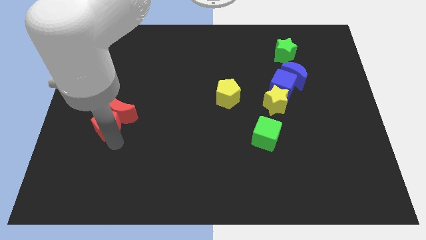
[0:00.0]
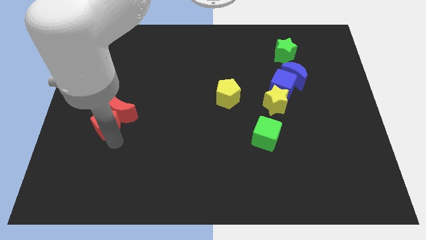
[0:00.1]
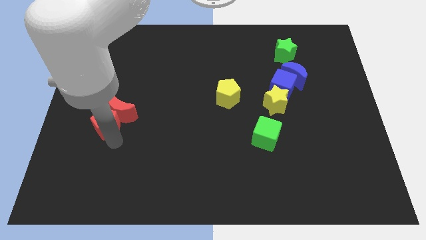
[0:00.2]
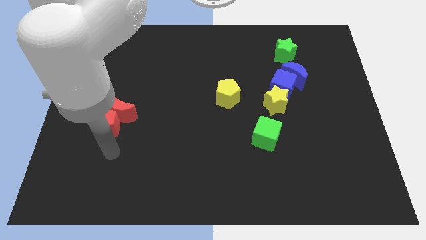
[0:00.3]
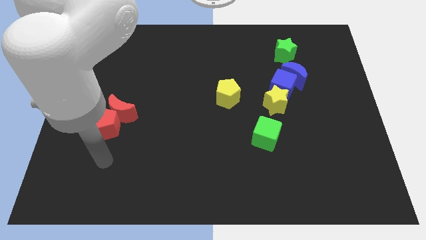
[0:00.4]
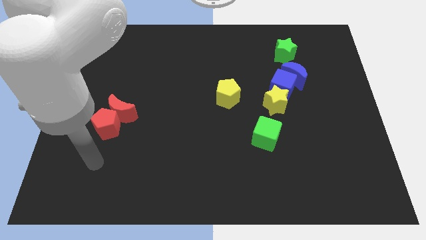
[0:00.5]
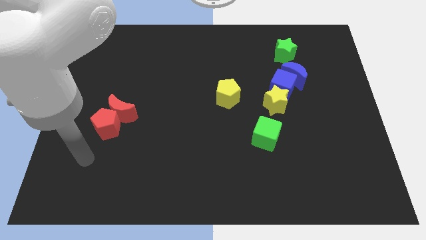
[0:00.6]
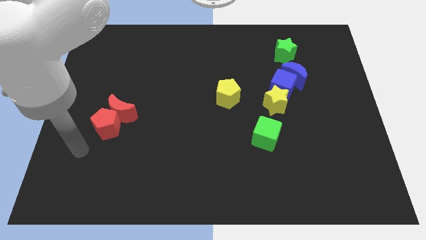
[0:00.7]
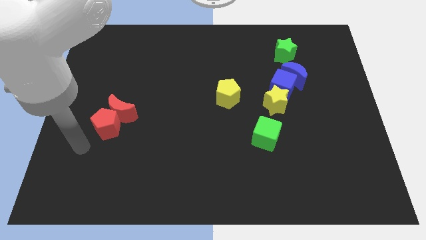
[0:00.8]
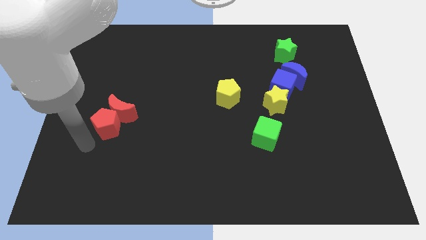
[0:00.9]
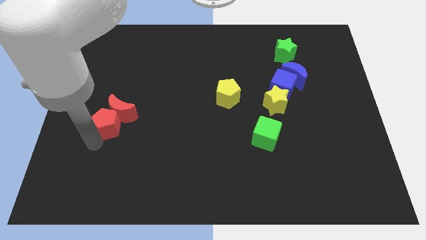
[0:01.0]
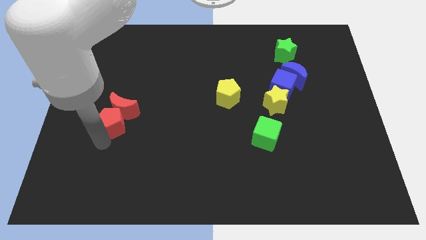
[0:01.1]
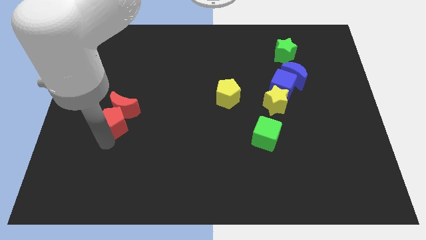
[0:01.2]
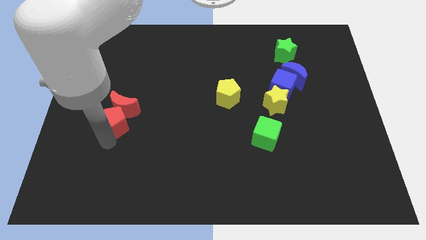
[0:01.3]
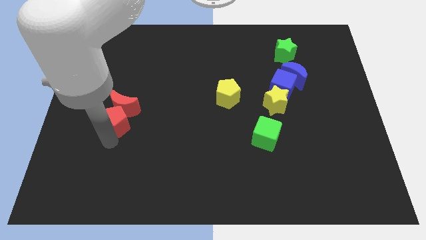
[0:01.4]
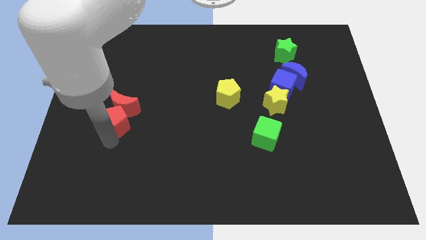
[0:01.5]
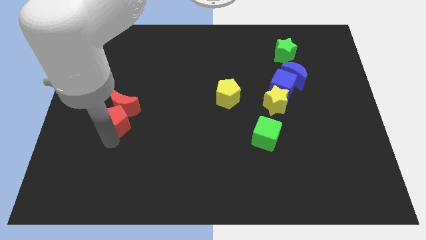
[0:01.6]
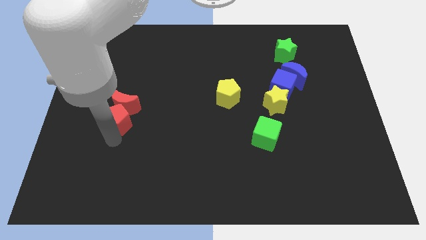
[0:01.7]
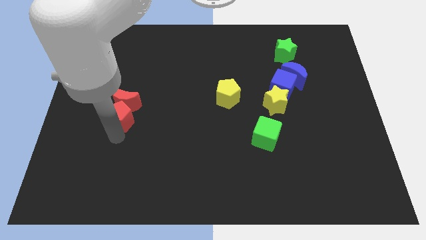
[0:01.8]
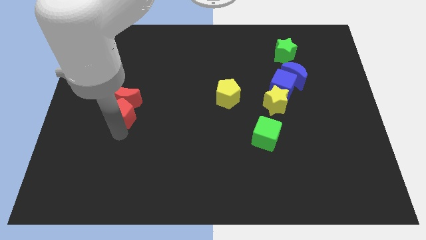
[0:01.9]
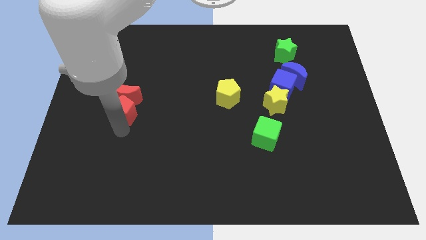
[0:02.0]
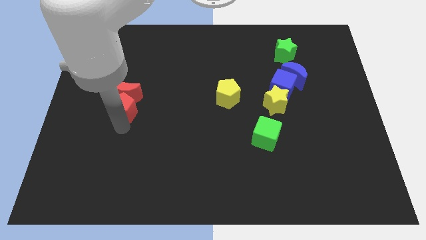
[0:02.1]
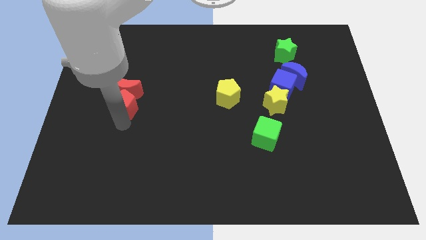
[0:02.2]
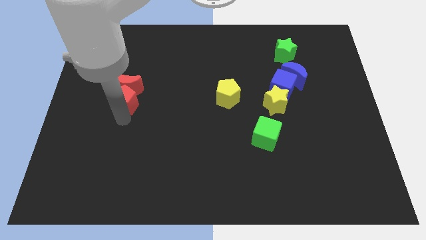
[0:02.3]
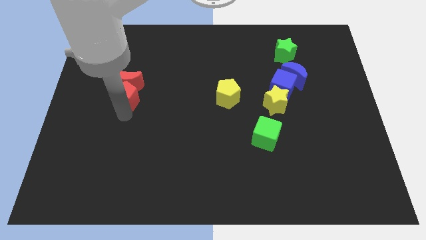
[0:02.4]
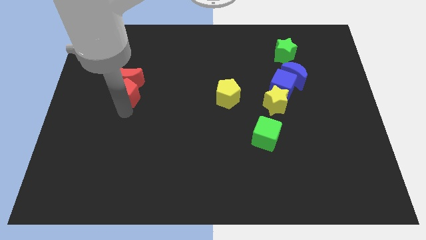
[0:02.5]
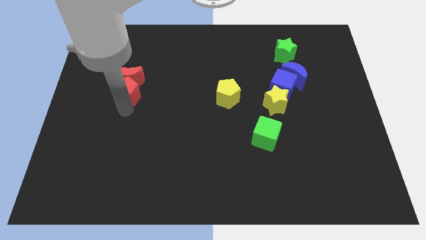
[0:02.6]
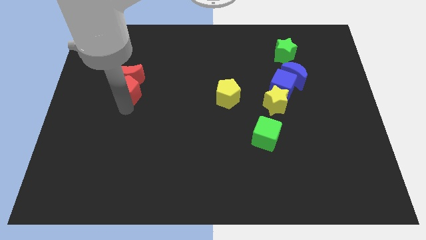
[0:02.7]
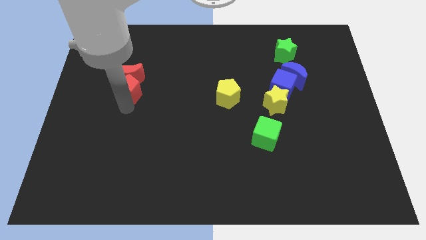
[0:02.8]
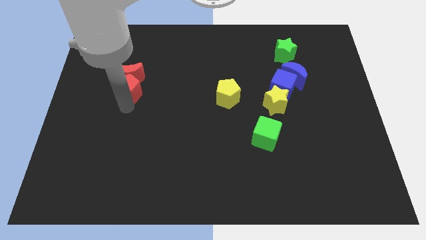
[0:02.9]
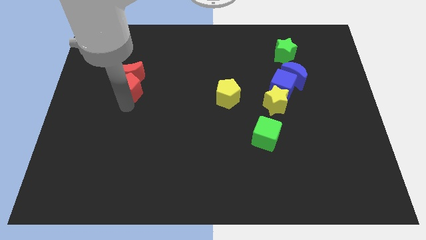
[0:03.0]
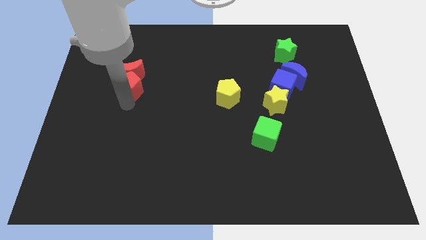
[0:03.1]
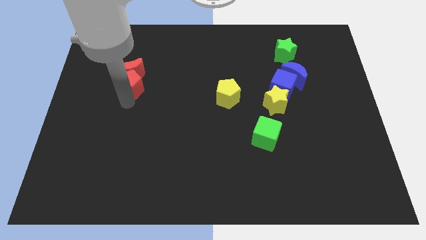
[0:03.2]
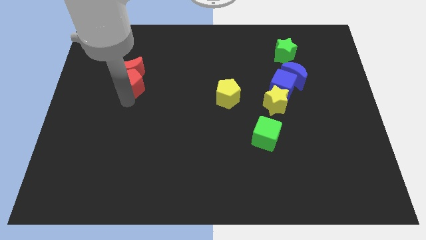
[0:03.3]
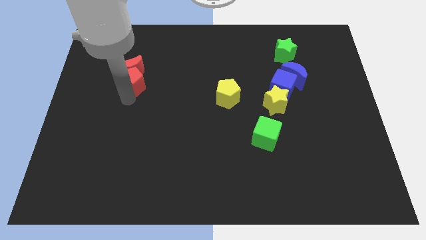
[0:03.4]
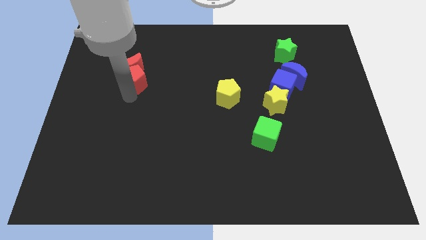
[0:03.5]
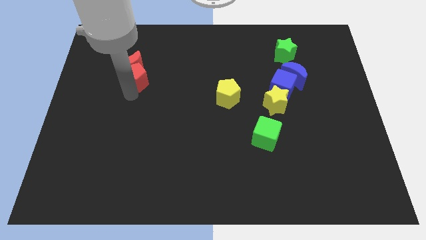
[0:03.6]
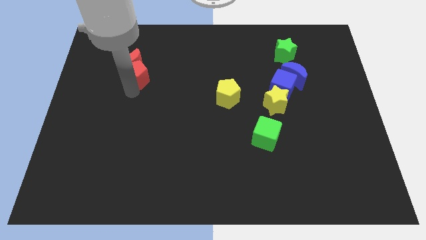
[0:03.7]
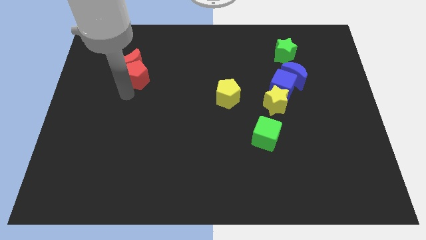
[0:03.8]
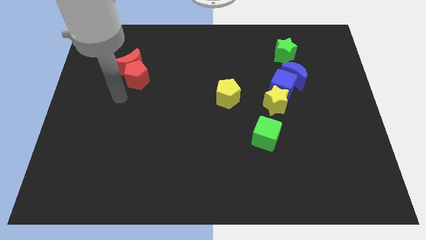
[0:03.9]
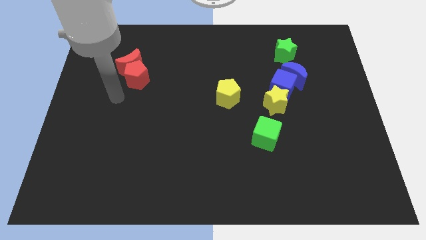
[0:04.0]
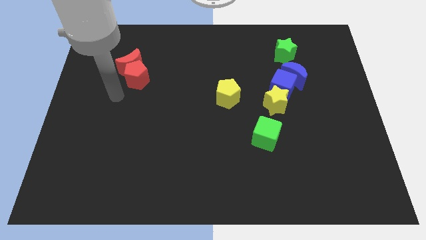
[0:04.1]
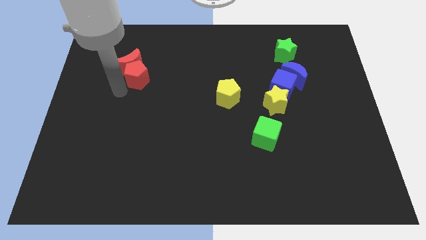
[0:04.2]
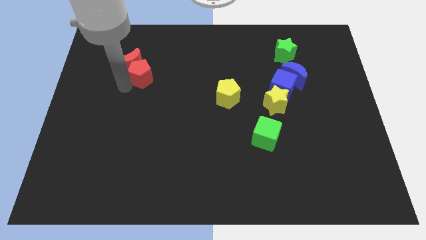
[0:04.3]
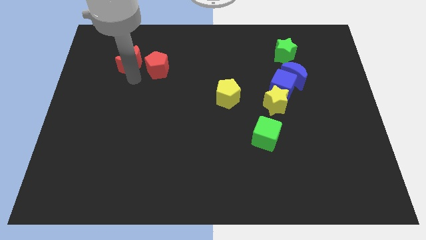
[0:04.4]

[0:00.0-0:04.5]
move the red moon upwards with the red pentagon

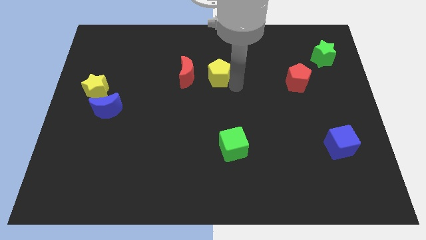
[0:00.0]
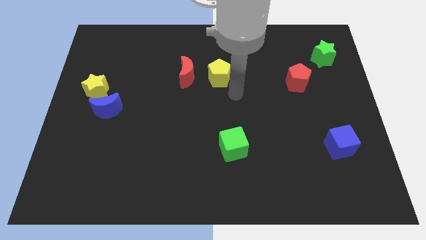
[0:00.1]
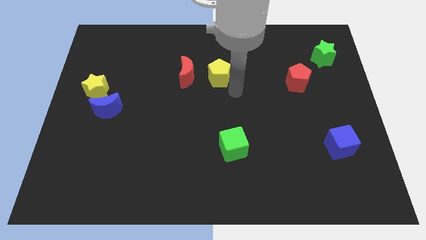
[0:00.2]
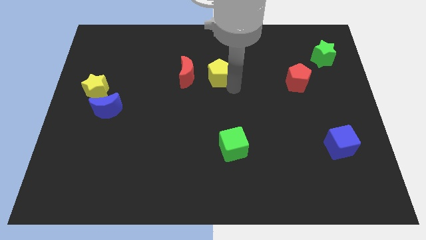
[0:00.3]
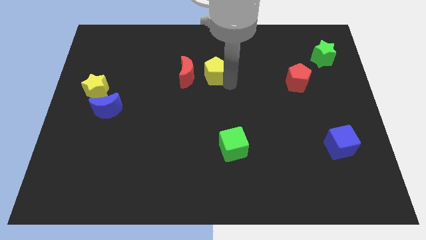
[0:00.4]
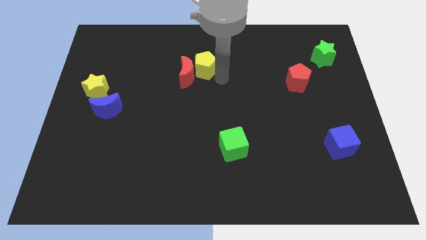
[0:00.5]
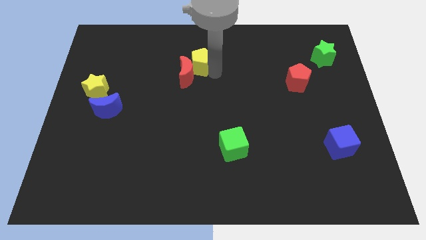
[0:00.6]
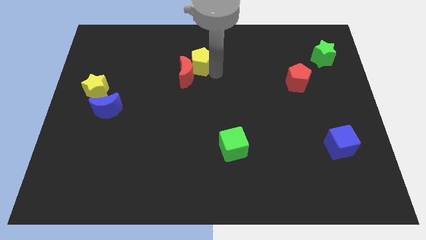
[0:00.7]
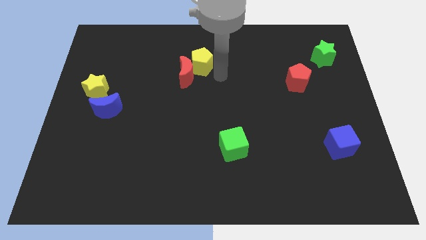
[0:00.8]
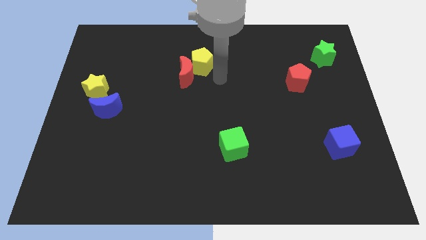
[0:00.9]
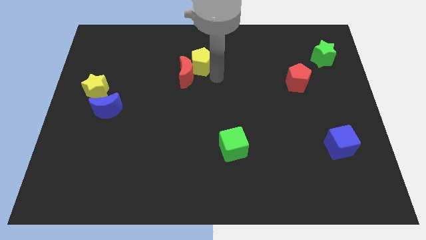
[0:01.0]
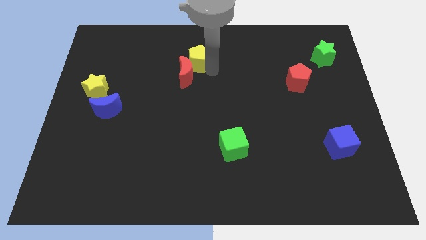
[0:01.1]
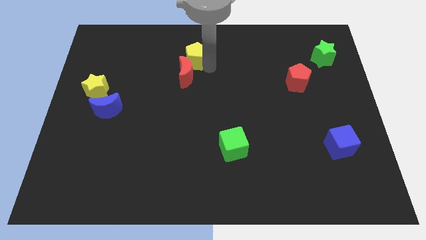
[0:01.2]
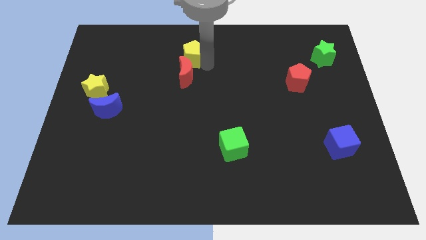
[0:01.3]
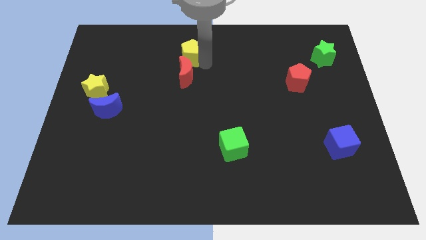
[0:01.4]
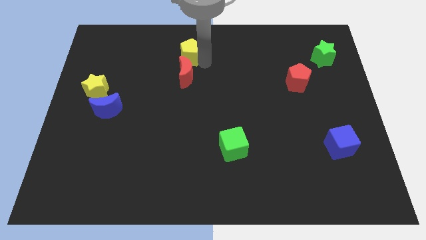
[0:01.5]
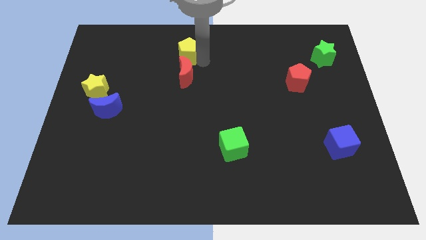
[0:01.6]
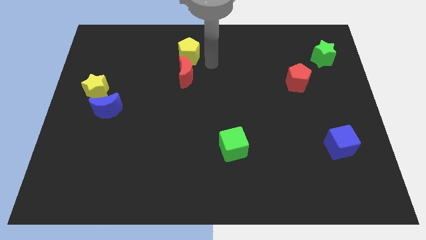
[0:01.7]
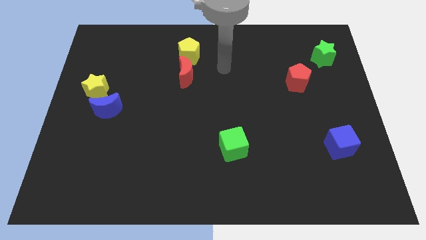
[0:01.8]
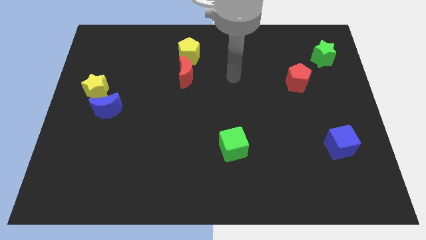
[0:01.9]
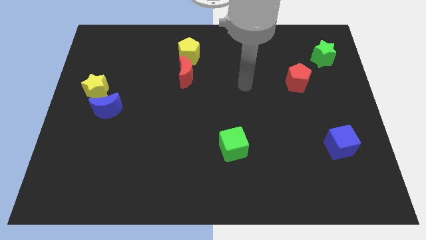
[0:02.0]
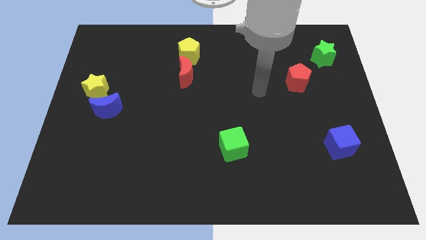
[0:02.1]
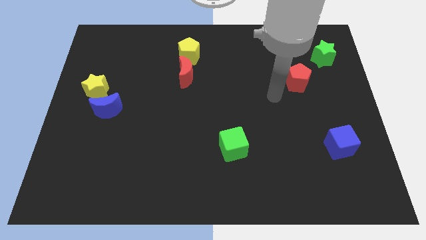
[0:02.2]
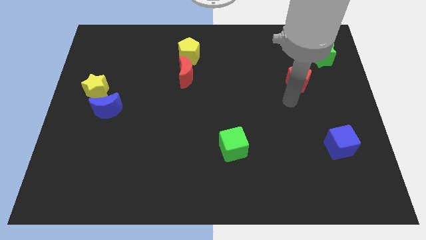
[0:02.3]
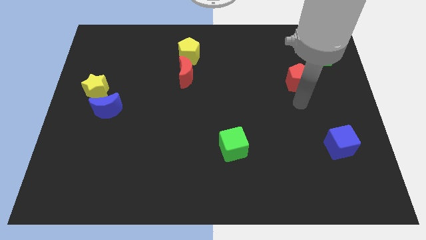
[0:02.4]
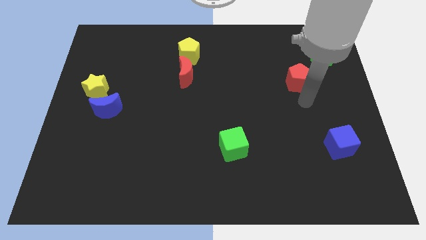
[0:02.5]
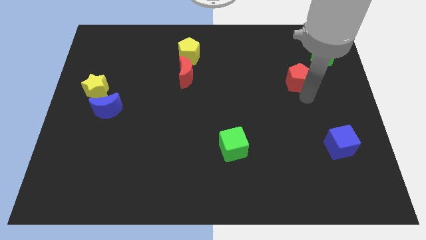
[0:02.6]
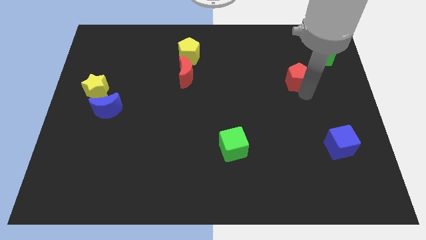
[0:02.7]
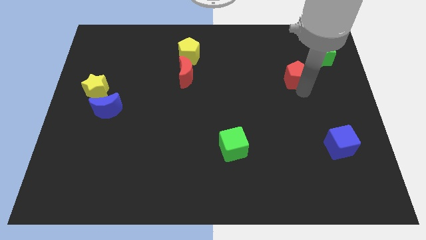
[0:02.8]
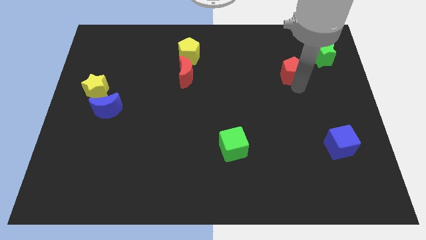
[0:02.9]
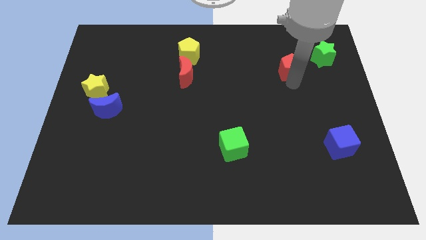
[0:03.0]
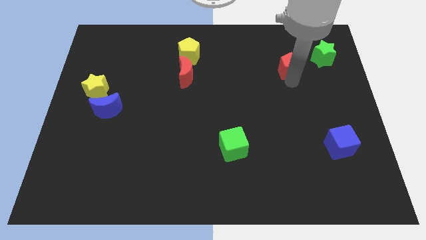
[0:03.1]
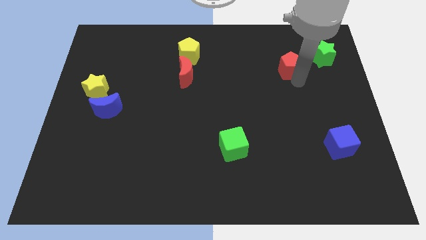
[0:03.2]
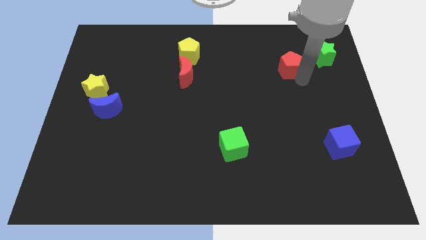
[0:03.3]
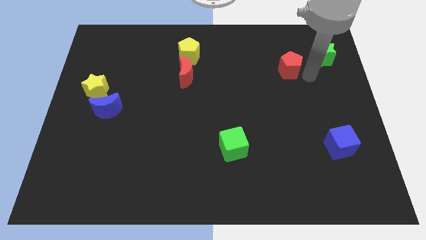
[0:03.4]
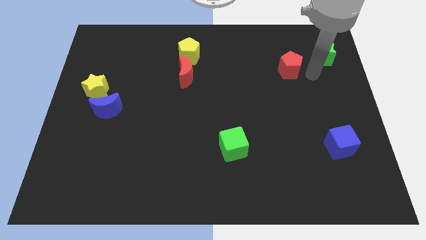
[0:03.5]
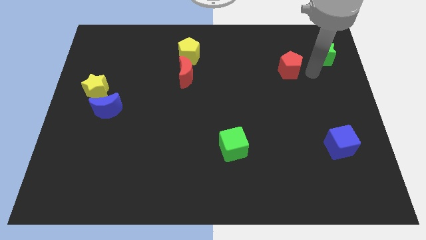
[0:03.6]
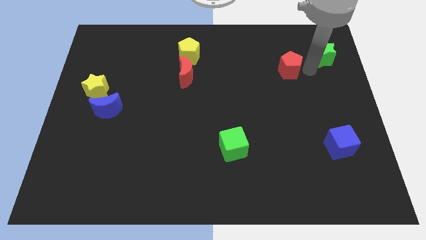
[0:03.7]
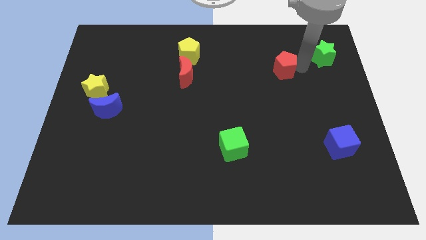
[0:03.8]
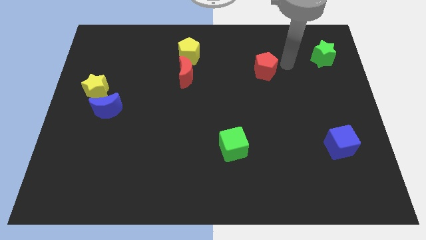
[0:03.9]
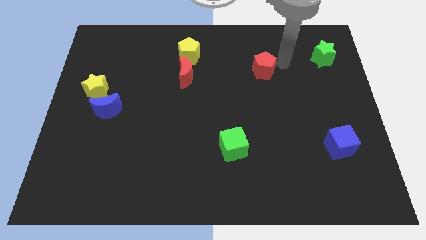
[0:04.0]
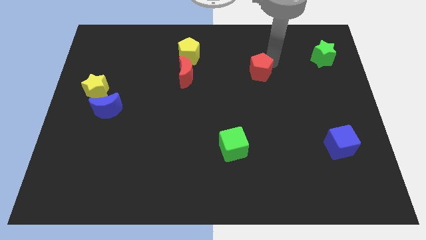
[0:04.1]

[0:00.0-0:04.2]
place the yellow pentagon towards the top of the red crescent

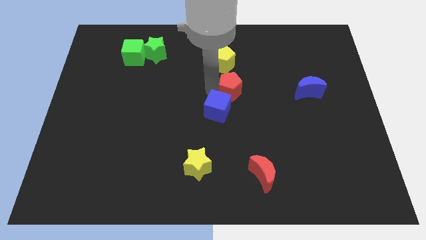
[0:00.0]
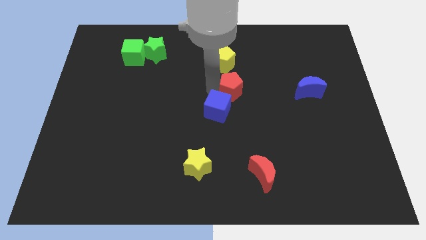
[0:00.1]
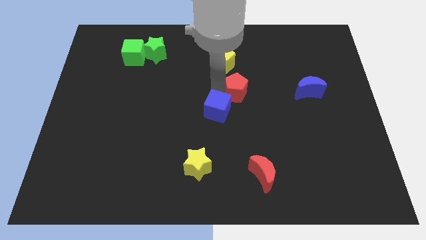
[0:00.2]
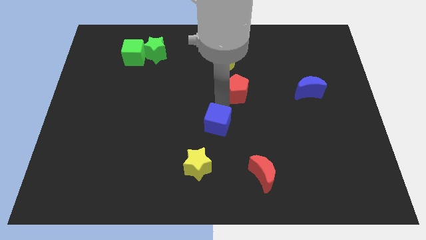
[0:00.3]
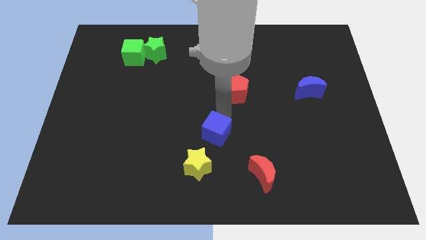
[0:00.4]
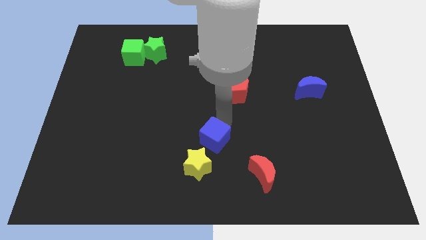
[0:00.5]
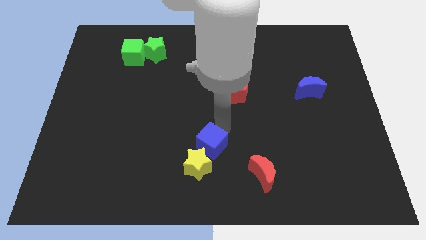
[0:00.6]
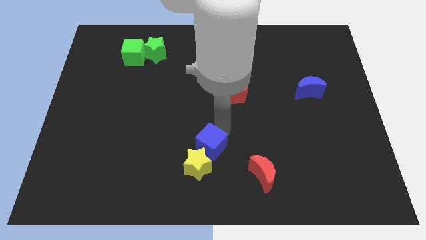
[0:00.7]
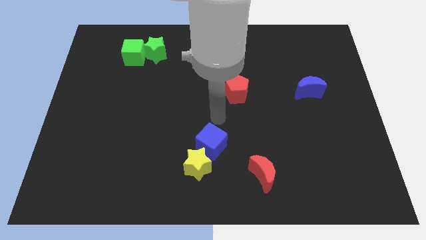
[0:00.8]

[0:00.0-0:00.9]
drag blue cube towards yellow star
